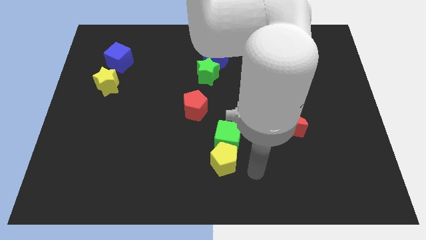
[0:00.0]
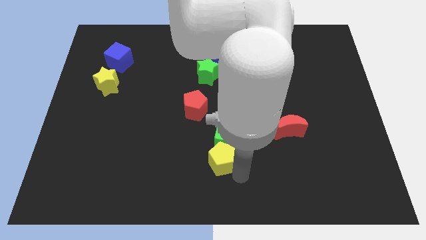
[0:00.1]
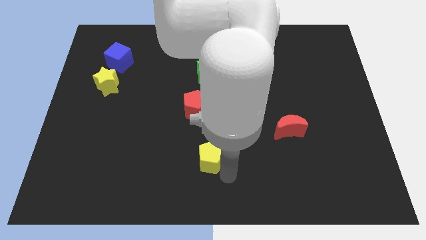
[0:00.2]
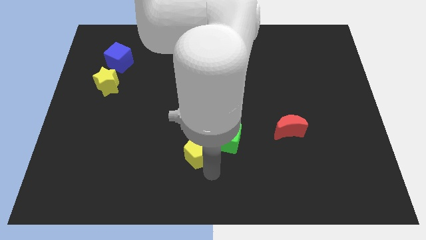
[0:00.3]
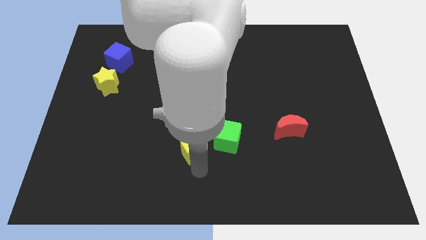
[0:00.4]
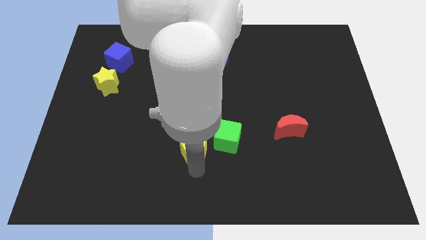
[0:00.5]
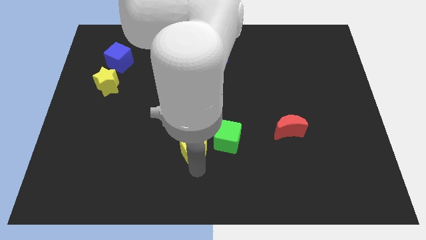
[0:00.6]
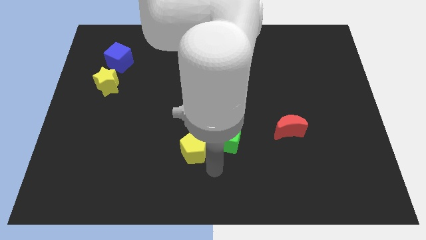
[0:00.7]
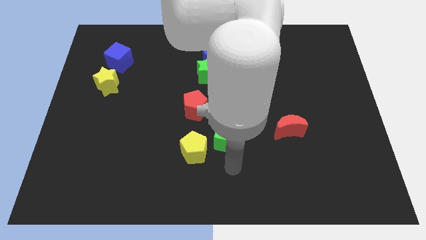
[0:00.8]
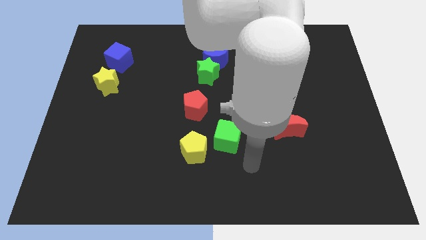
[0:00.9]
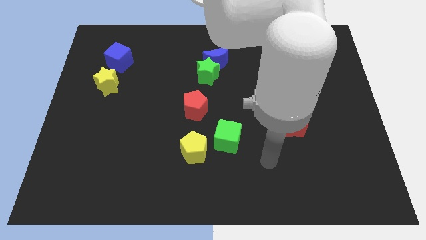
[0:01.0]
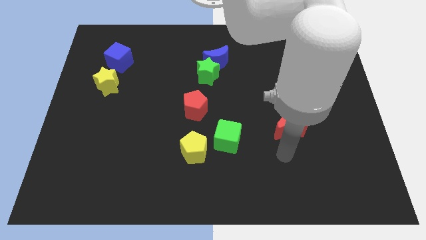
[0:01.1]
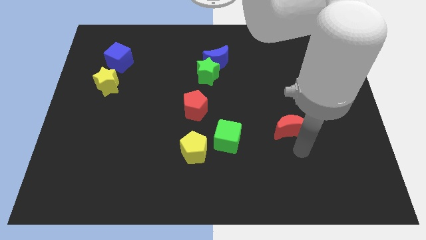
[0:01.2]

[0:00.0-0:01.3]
separate yellow pentagon from green cube

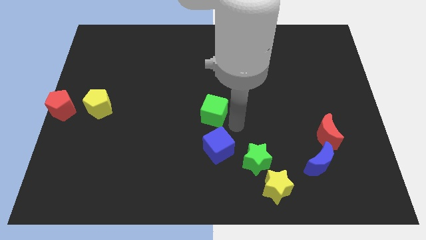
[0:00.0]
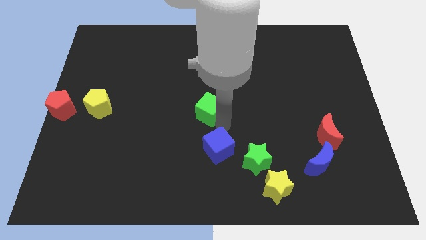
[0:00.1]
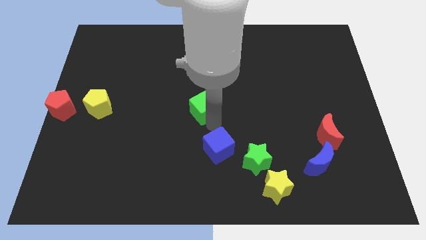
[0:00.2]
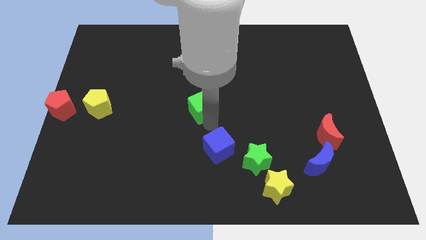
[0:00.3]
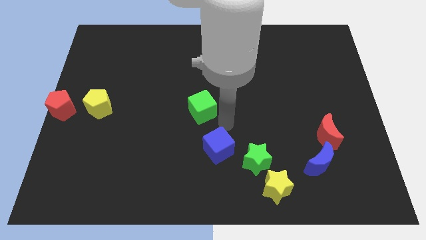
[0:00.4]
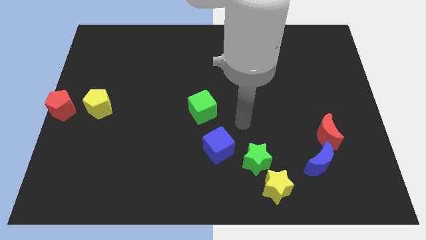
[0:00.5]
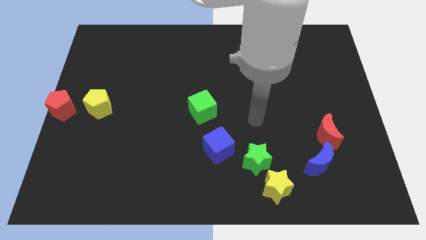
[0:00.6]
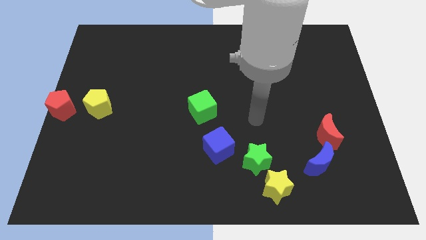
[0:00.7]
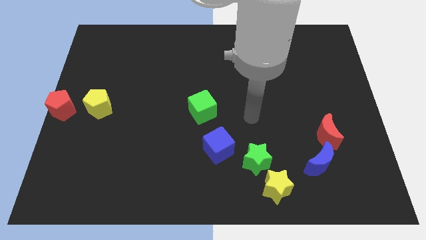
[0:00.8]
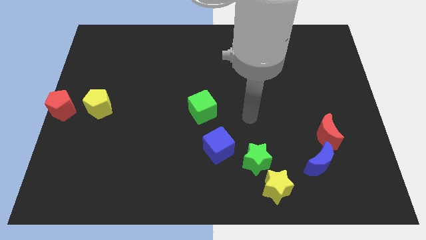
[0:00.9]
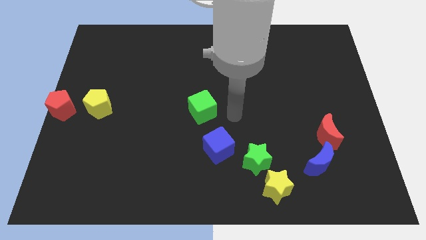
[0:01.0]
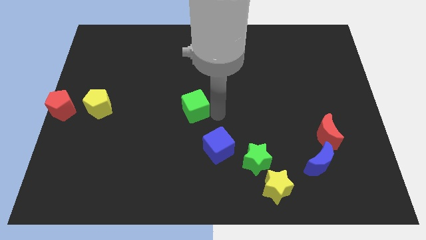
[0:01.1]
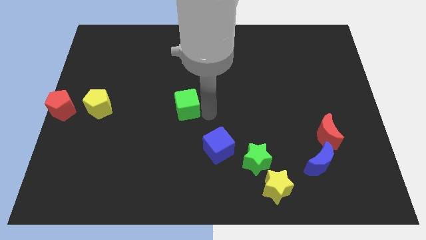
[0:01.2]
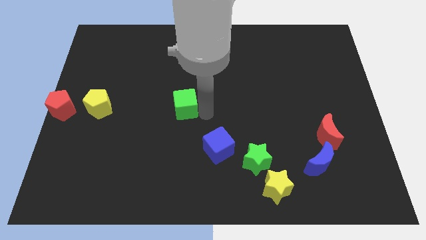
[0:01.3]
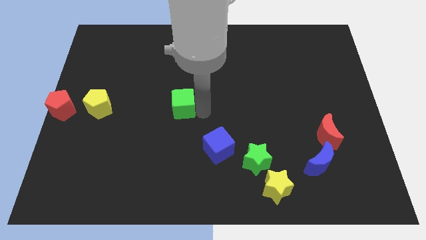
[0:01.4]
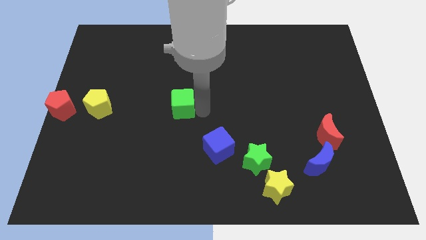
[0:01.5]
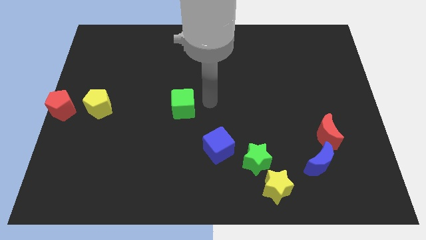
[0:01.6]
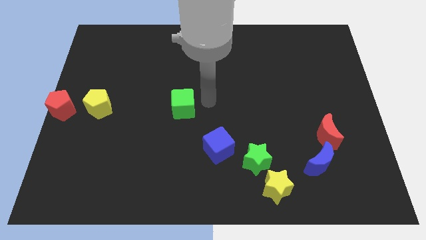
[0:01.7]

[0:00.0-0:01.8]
slide the green cube right to the yellow pentagon

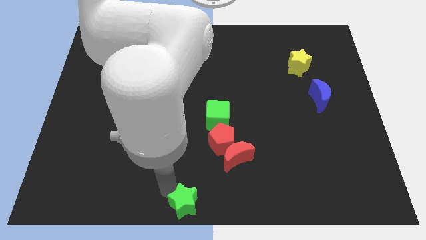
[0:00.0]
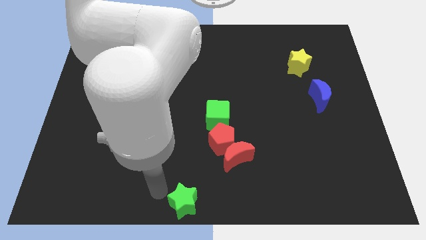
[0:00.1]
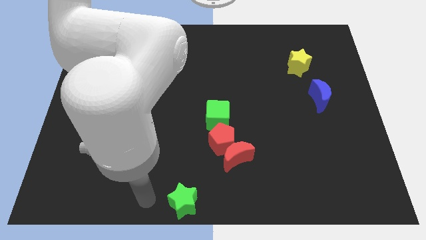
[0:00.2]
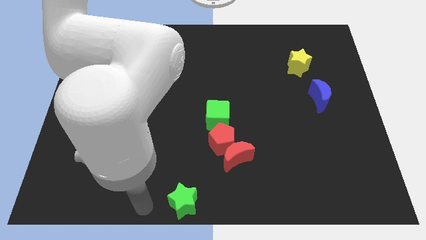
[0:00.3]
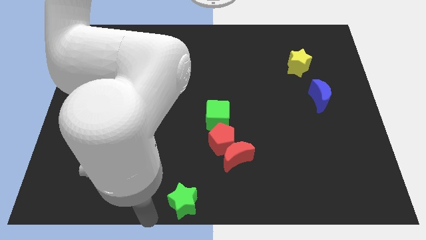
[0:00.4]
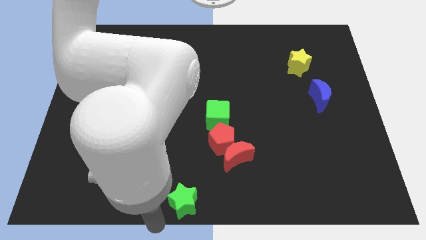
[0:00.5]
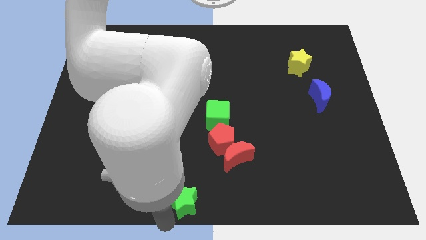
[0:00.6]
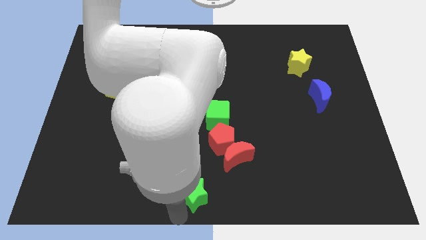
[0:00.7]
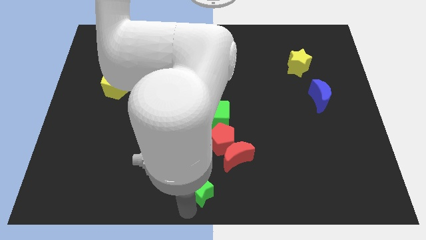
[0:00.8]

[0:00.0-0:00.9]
touch green star twith your arm

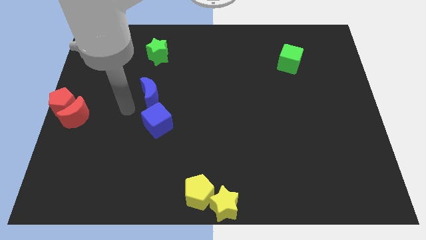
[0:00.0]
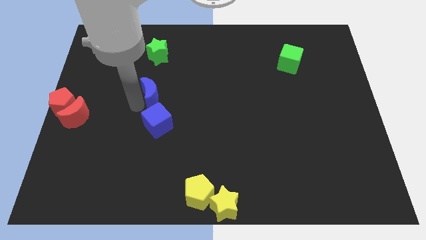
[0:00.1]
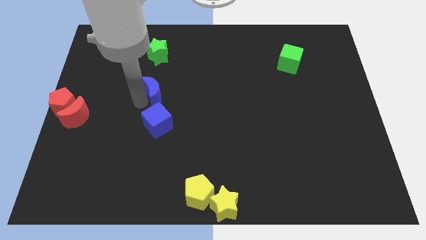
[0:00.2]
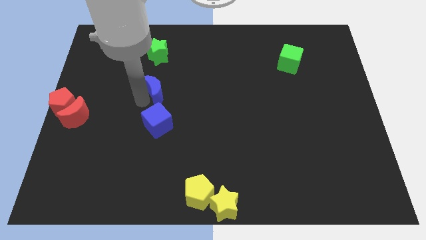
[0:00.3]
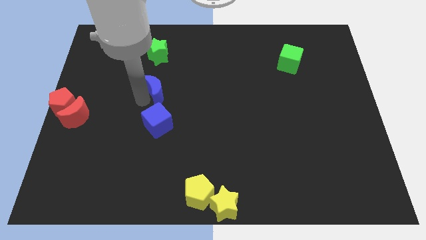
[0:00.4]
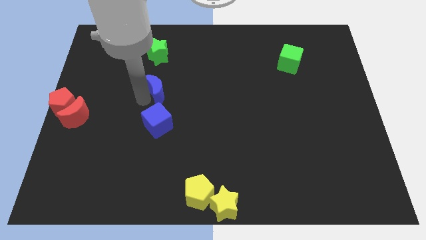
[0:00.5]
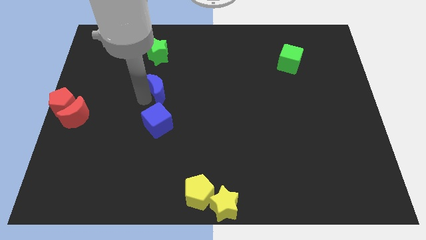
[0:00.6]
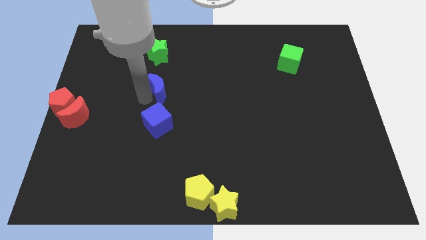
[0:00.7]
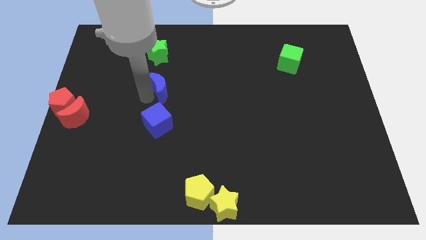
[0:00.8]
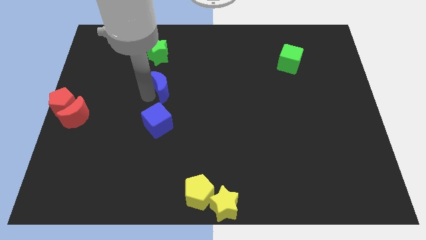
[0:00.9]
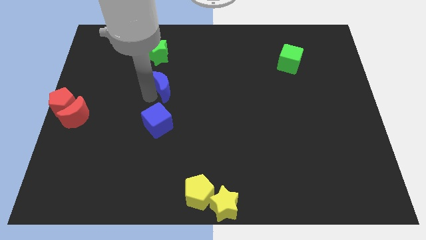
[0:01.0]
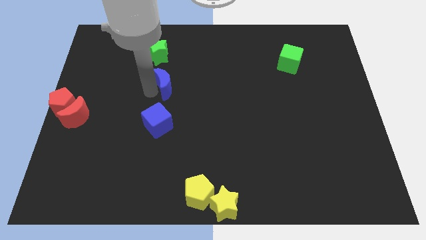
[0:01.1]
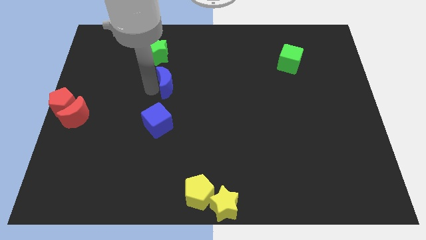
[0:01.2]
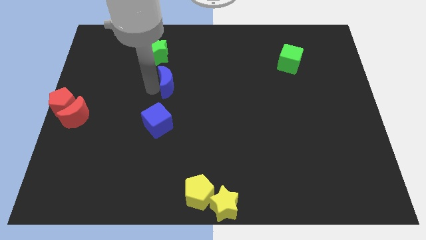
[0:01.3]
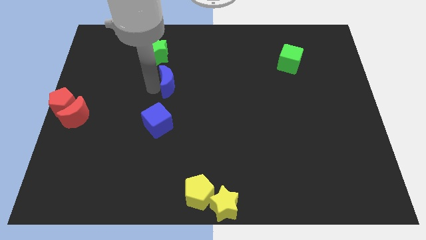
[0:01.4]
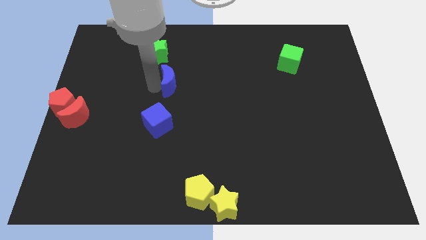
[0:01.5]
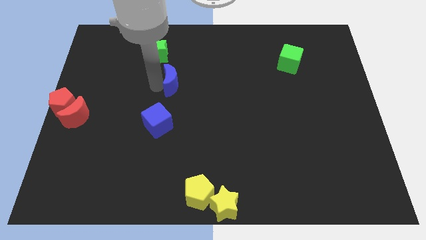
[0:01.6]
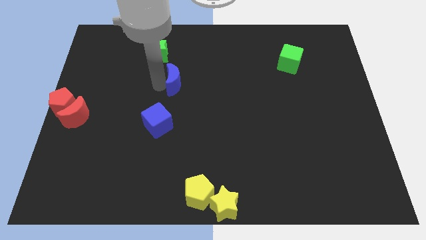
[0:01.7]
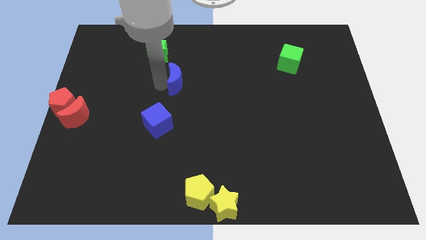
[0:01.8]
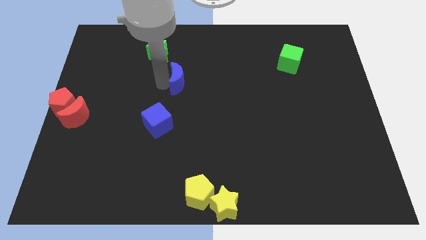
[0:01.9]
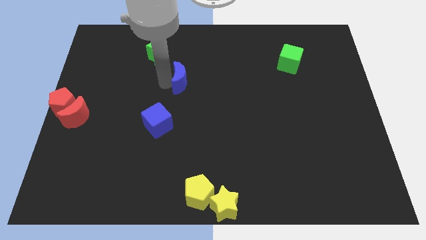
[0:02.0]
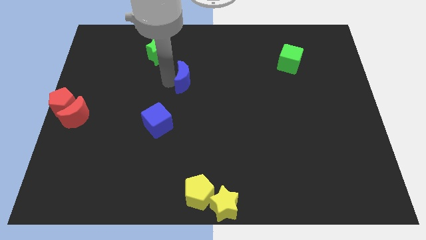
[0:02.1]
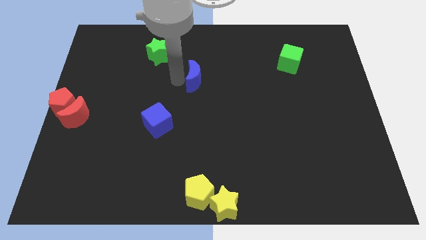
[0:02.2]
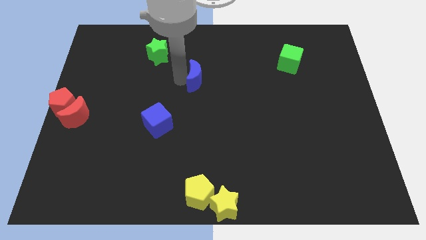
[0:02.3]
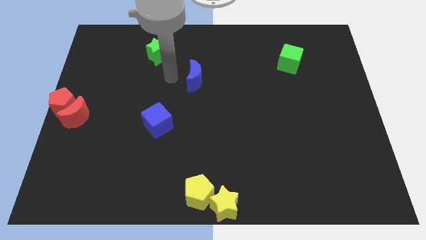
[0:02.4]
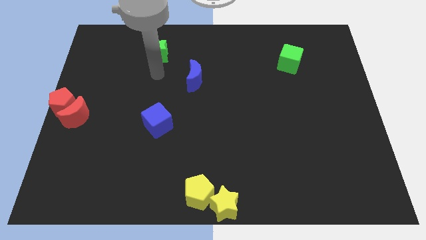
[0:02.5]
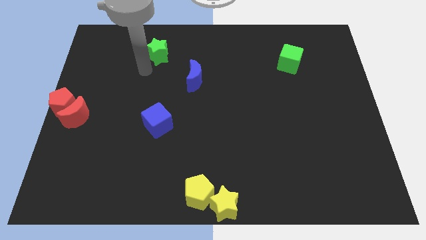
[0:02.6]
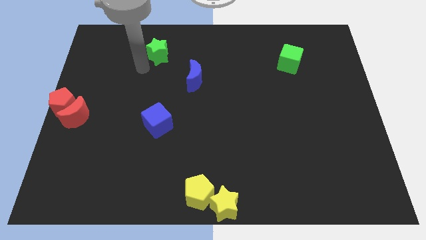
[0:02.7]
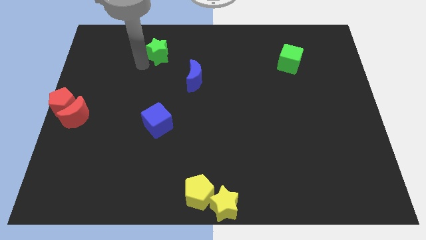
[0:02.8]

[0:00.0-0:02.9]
slide the blue moon diagonally bottom right to the green star

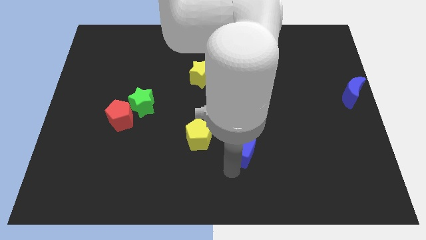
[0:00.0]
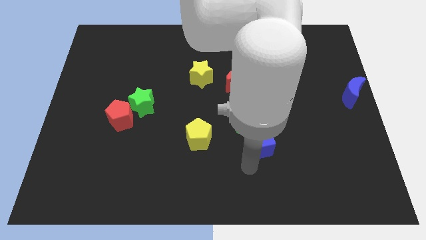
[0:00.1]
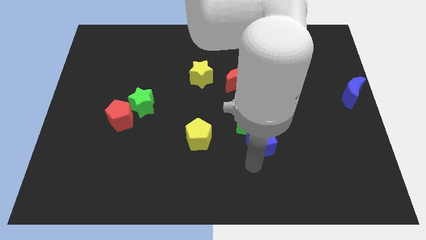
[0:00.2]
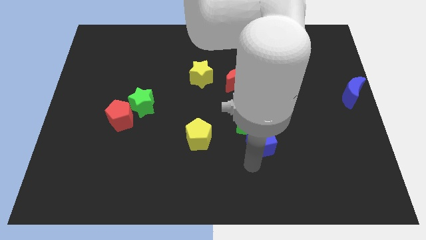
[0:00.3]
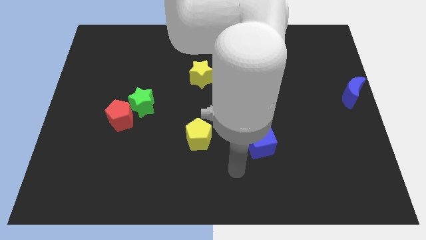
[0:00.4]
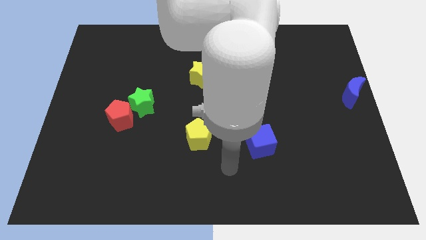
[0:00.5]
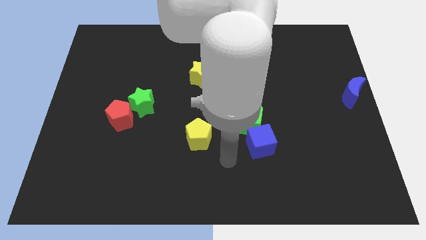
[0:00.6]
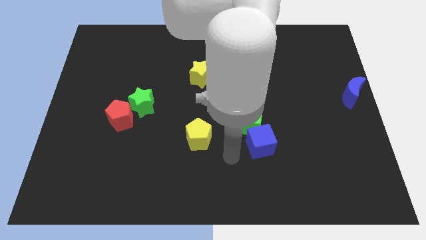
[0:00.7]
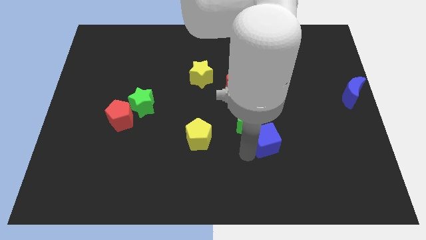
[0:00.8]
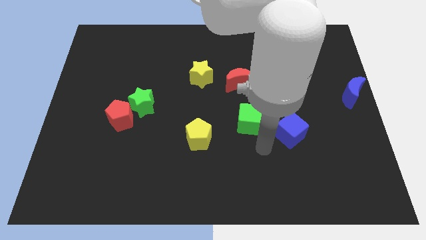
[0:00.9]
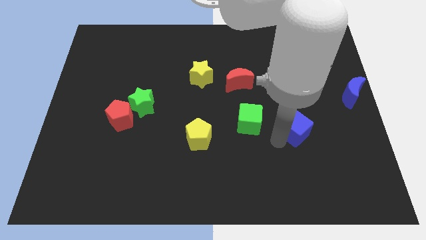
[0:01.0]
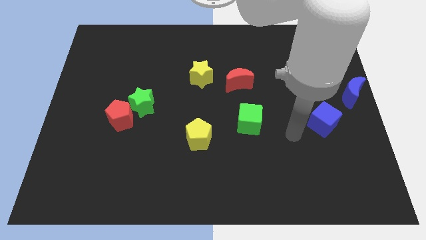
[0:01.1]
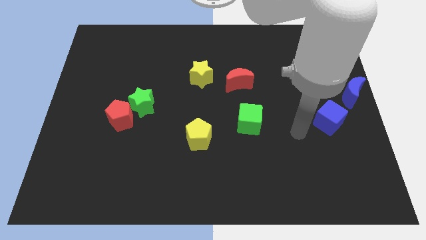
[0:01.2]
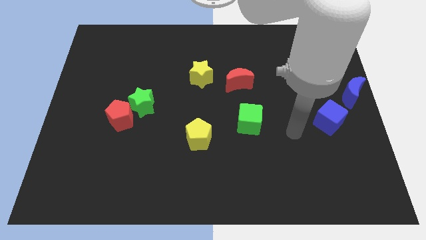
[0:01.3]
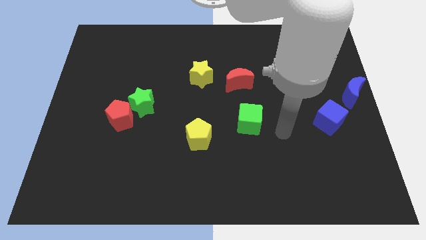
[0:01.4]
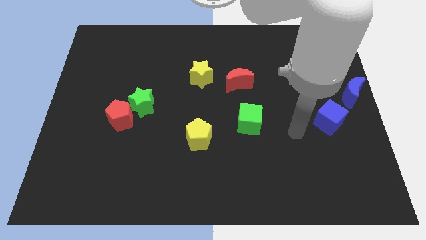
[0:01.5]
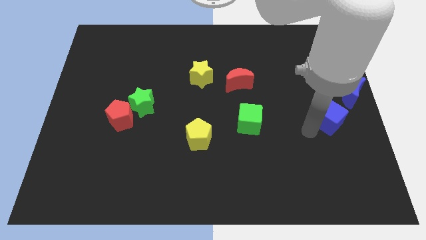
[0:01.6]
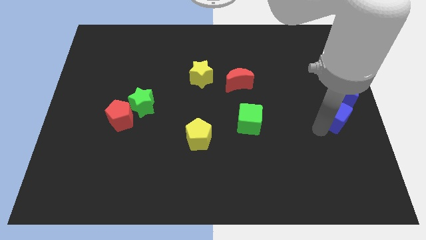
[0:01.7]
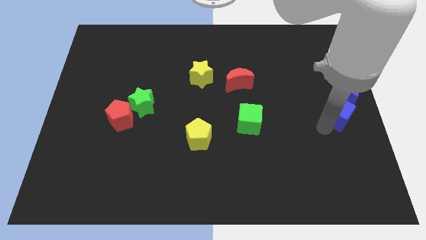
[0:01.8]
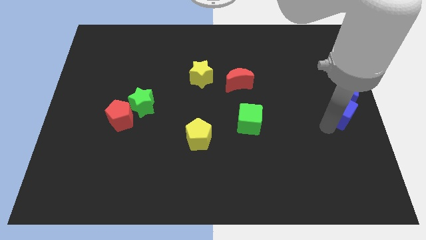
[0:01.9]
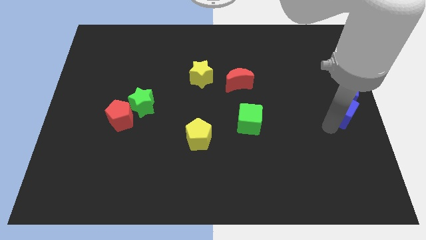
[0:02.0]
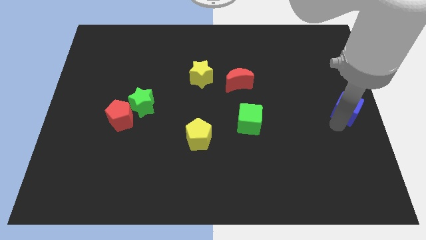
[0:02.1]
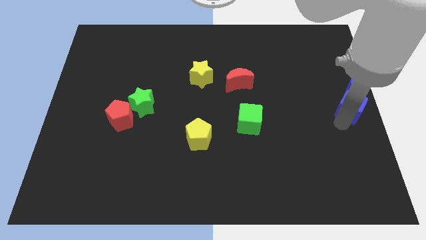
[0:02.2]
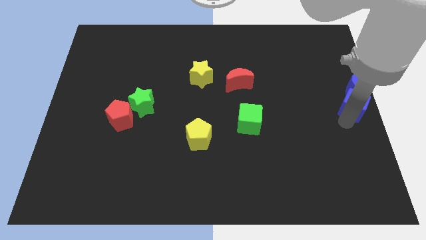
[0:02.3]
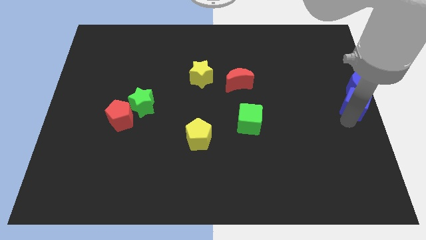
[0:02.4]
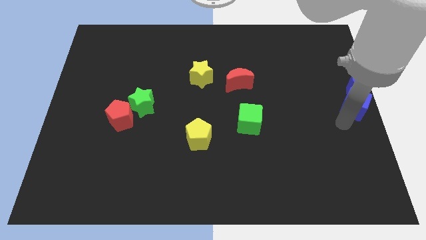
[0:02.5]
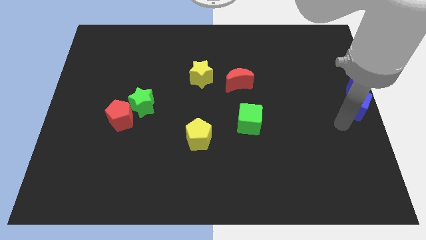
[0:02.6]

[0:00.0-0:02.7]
place blue cube below blue crescent
